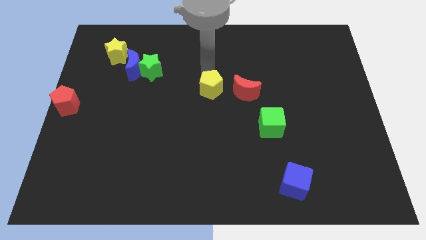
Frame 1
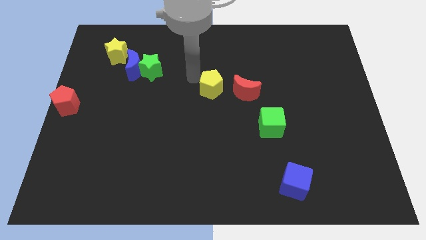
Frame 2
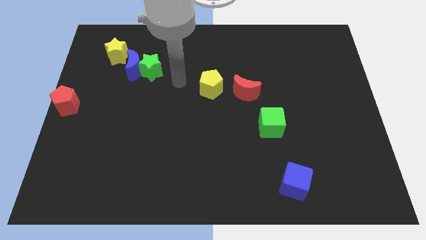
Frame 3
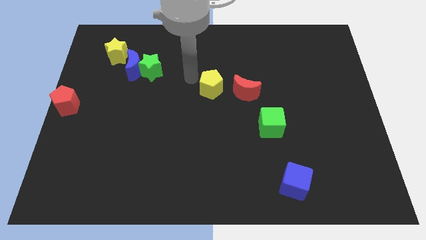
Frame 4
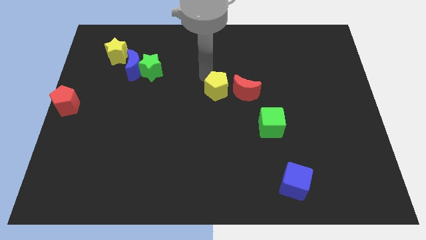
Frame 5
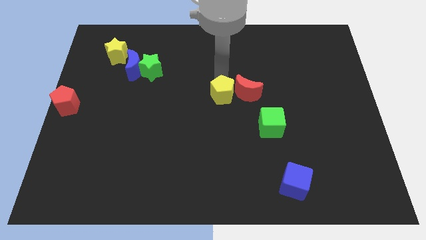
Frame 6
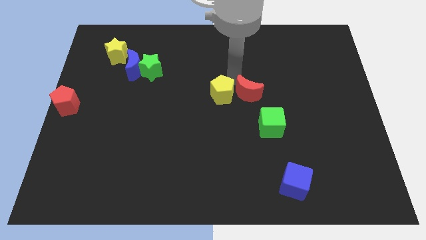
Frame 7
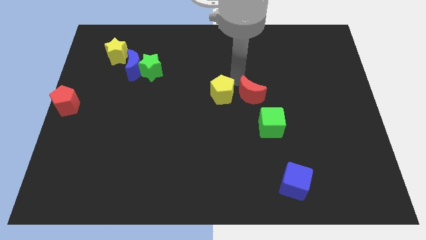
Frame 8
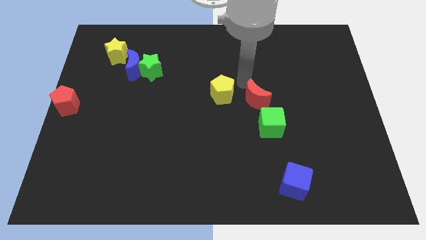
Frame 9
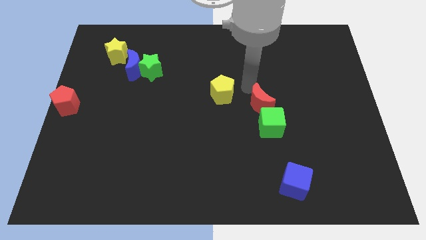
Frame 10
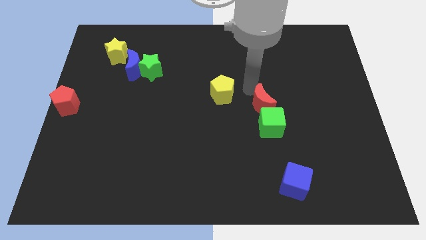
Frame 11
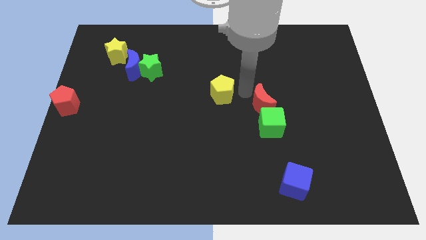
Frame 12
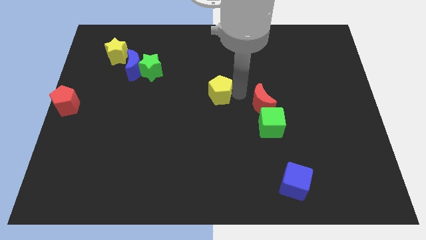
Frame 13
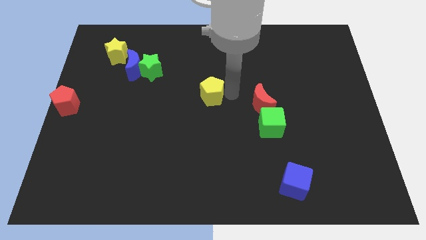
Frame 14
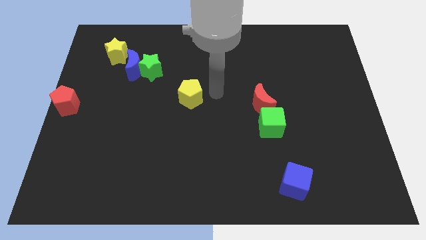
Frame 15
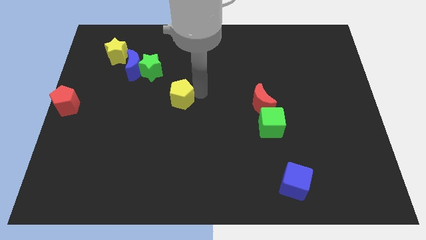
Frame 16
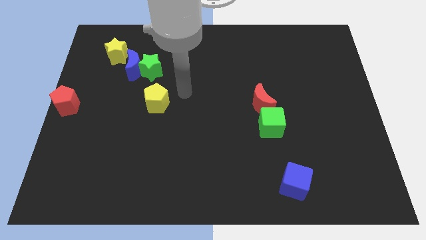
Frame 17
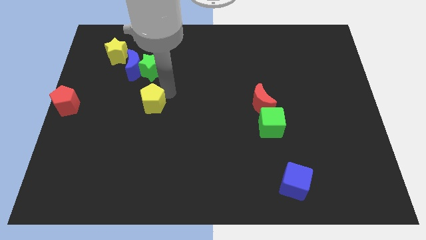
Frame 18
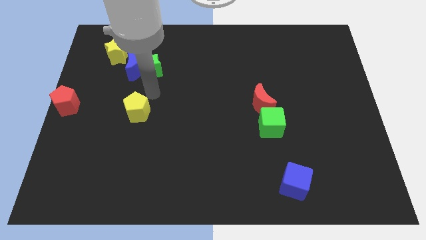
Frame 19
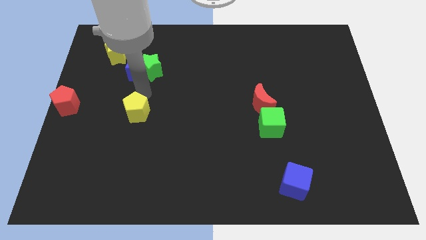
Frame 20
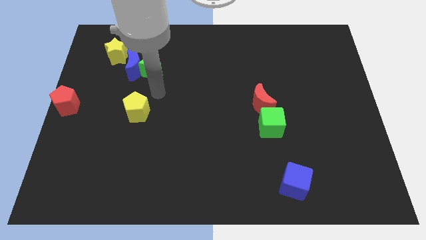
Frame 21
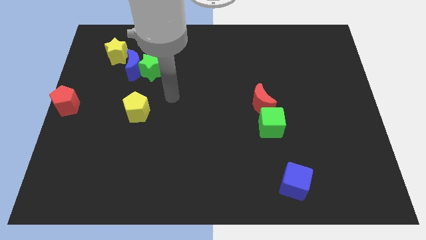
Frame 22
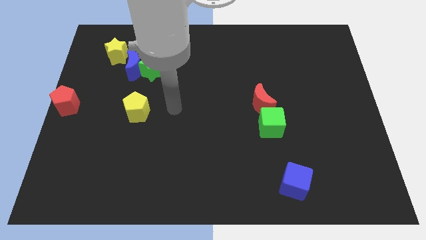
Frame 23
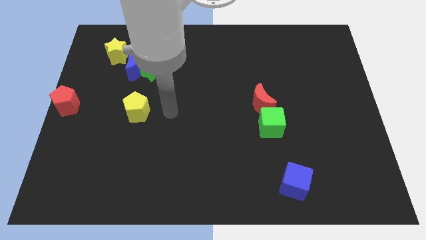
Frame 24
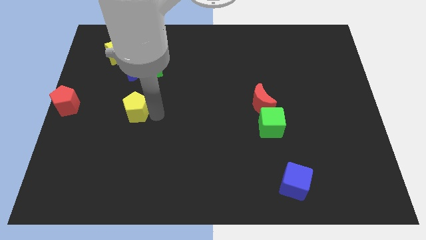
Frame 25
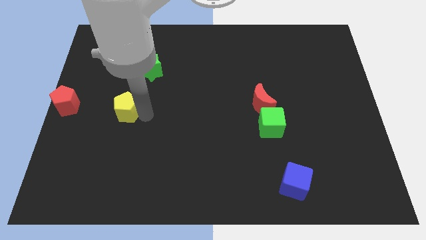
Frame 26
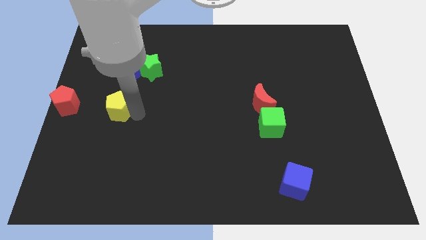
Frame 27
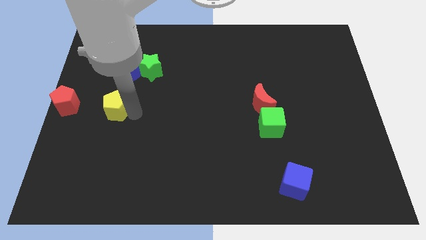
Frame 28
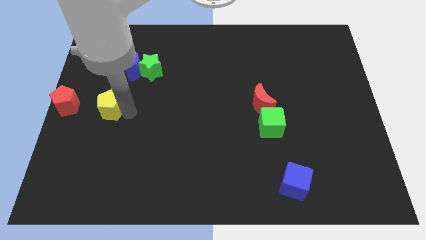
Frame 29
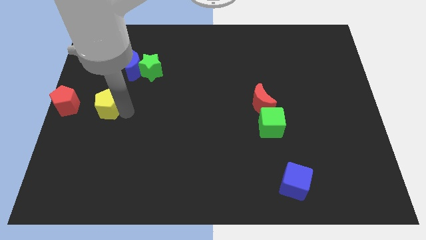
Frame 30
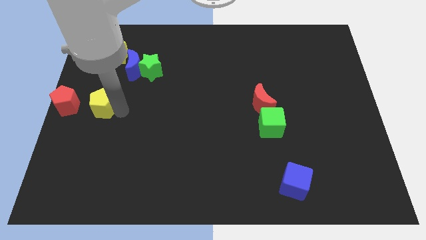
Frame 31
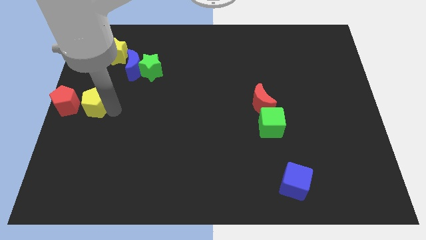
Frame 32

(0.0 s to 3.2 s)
push the yellow pentagon close to the red pentagon

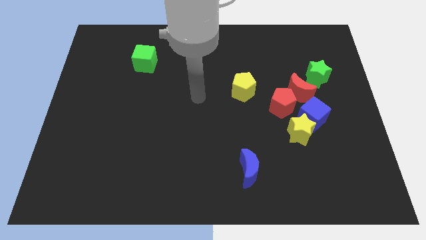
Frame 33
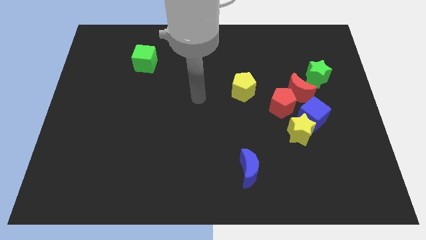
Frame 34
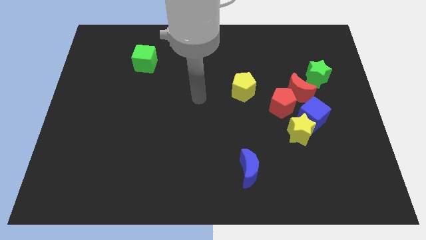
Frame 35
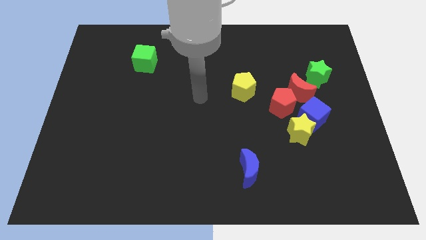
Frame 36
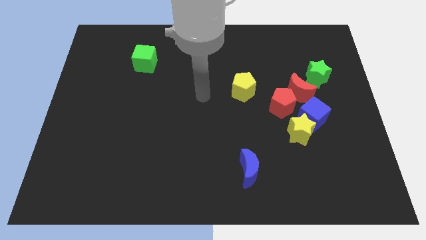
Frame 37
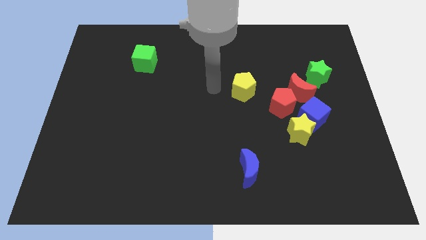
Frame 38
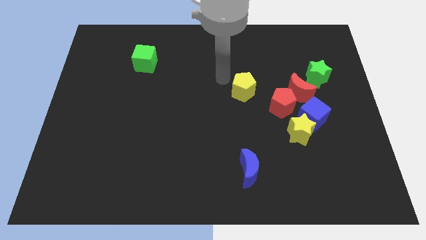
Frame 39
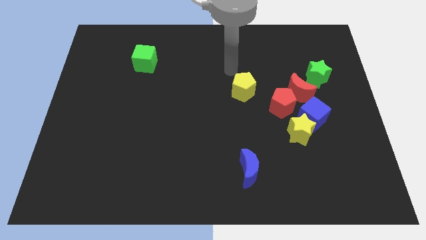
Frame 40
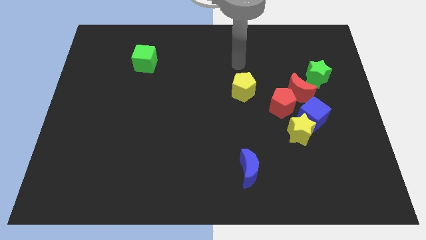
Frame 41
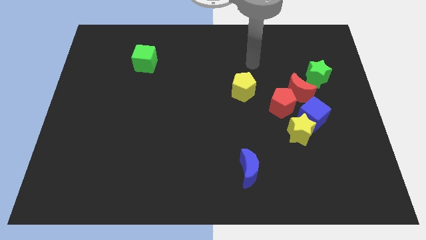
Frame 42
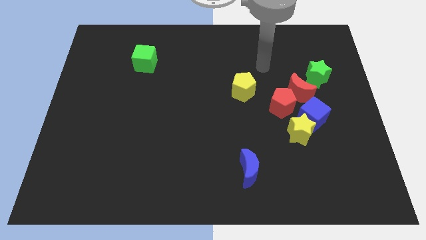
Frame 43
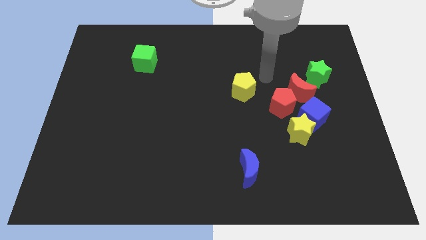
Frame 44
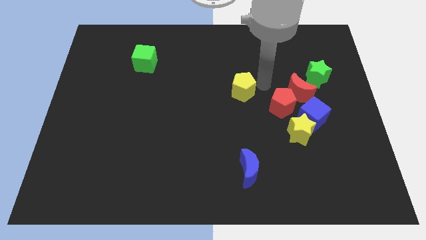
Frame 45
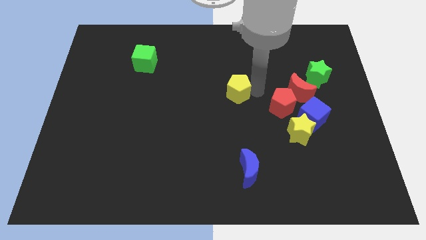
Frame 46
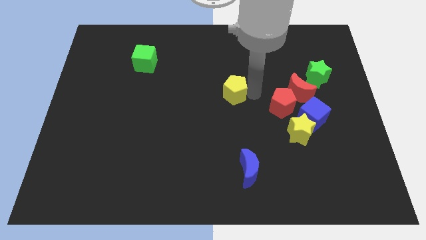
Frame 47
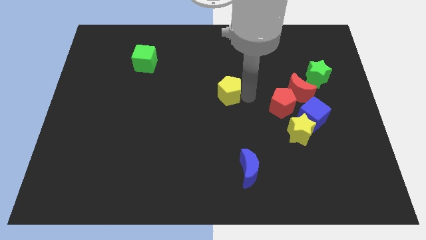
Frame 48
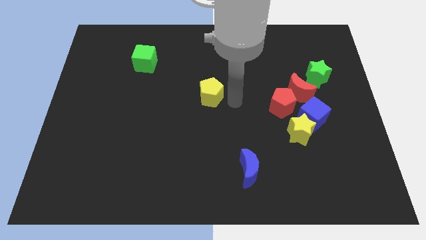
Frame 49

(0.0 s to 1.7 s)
move your arm close to the yellow pentagon

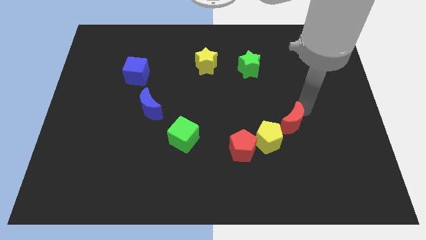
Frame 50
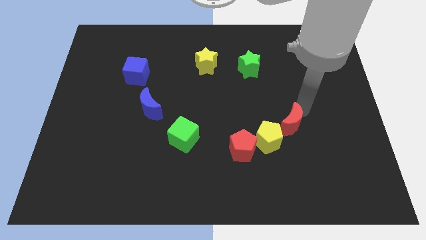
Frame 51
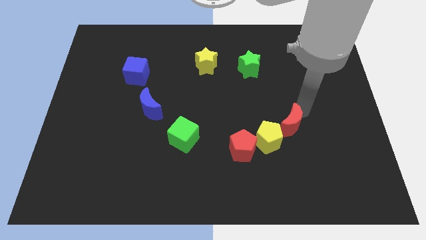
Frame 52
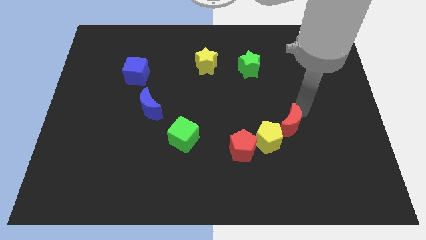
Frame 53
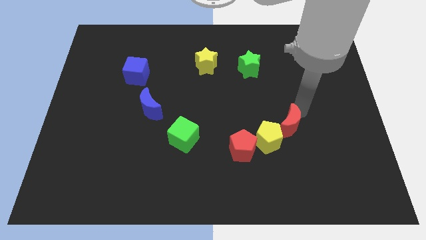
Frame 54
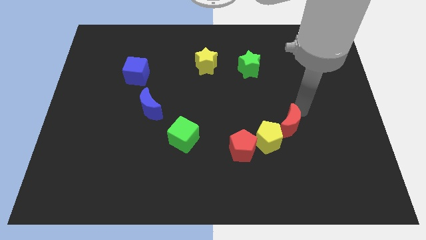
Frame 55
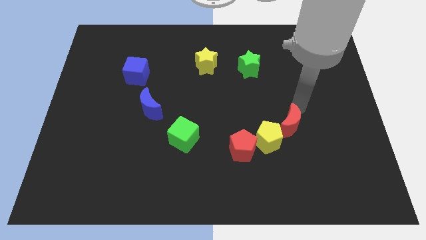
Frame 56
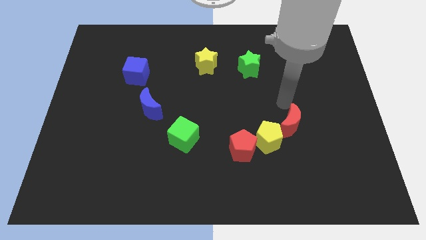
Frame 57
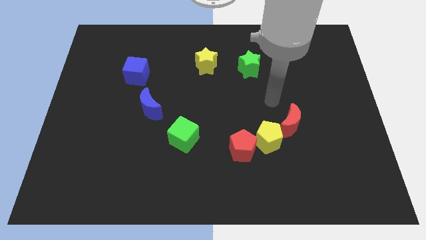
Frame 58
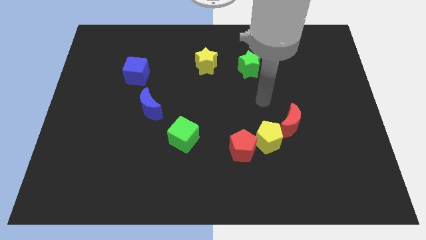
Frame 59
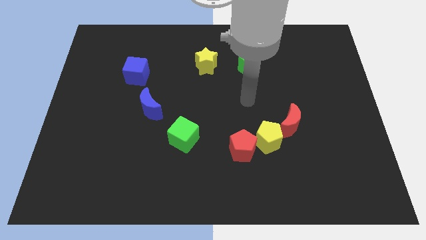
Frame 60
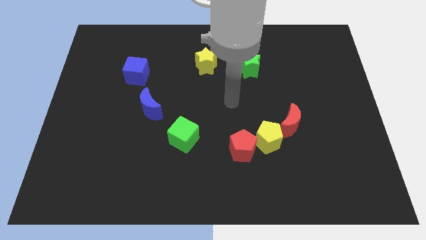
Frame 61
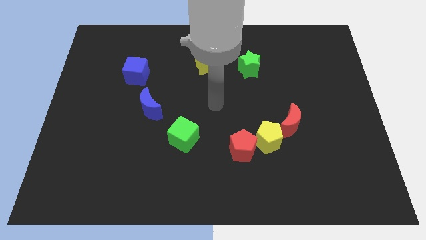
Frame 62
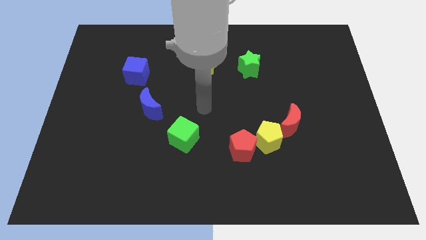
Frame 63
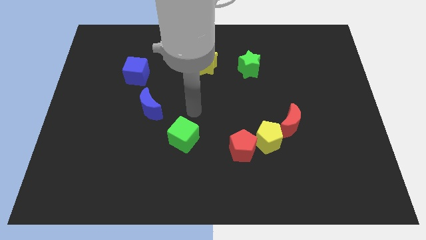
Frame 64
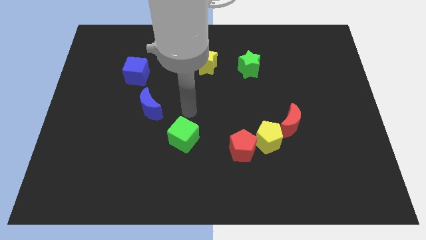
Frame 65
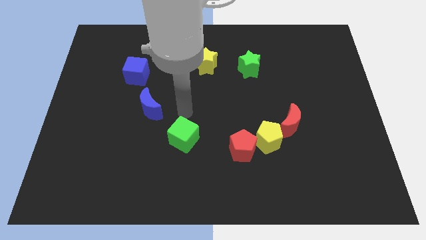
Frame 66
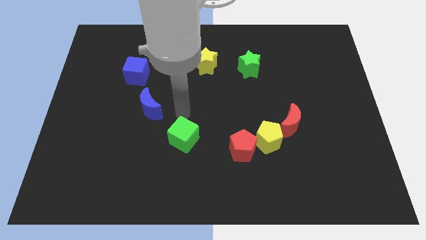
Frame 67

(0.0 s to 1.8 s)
move the red moon into the yellow pentagon

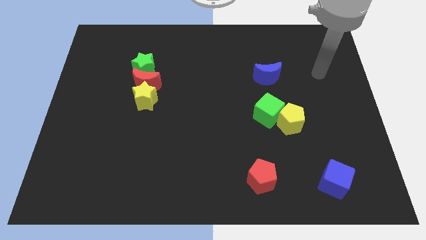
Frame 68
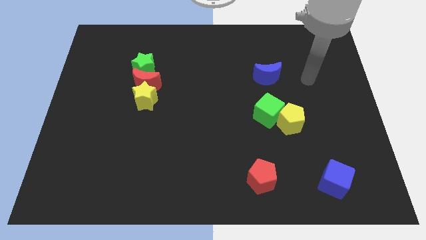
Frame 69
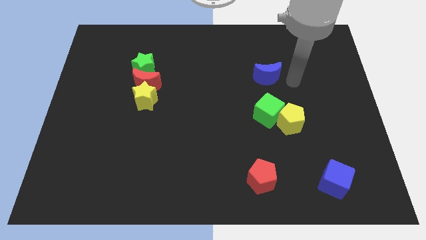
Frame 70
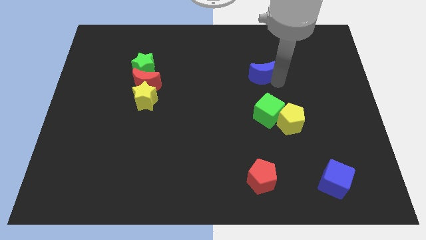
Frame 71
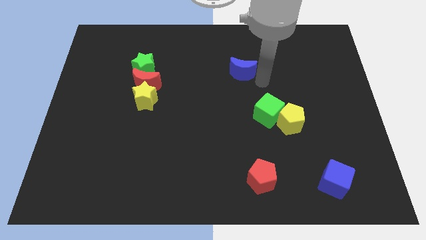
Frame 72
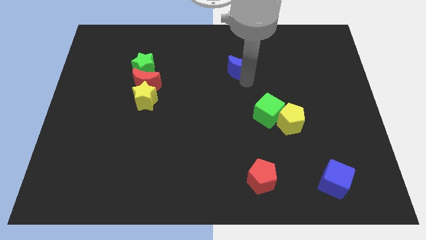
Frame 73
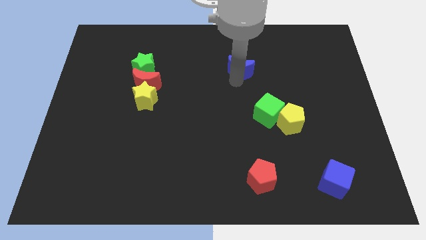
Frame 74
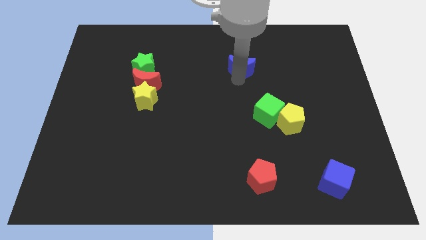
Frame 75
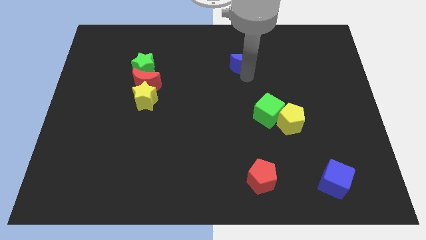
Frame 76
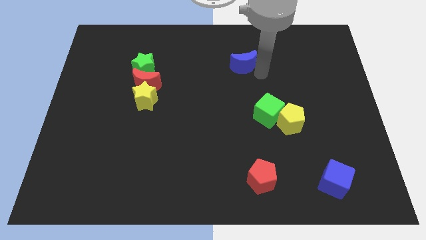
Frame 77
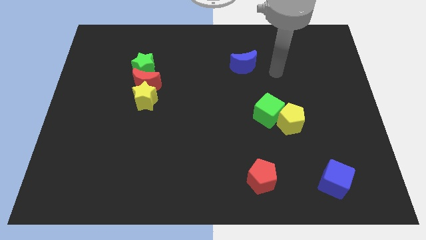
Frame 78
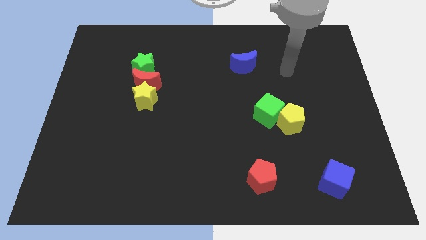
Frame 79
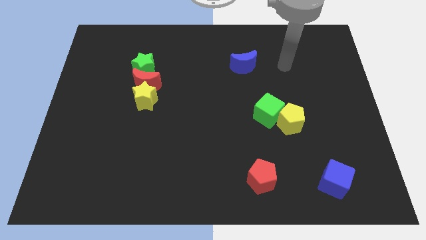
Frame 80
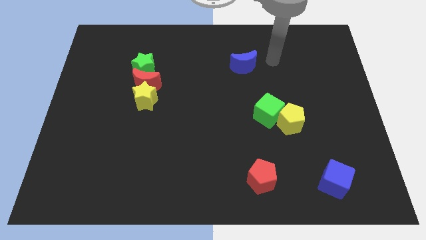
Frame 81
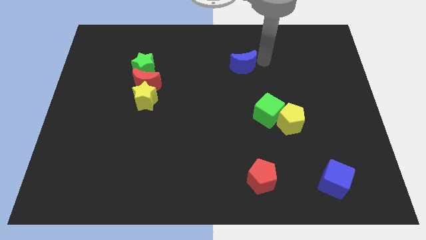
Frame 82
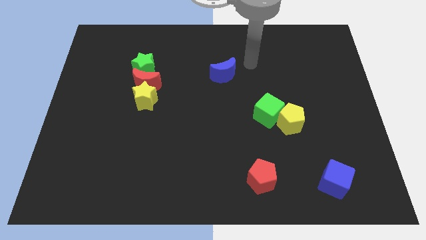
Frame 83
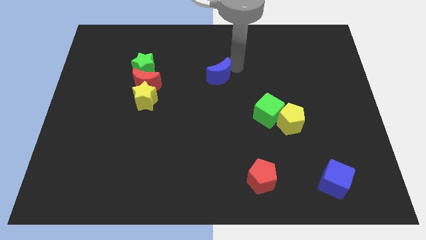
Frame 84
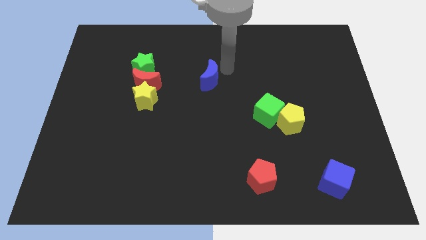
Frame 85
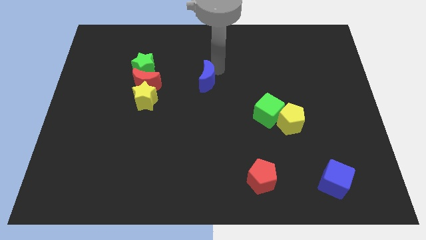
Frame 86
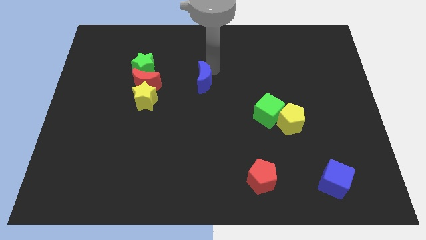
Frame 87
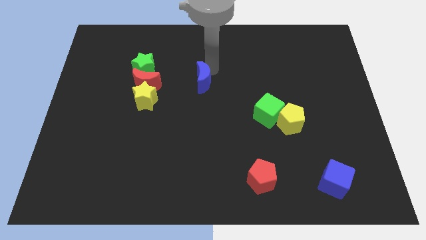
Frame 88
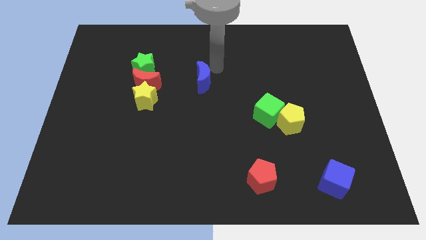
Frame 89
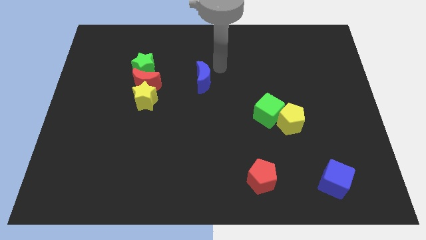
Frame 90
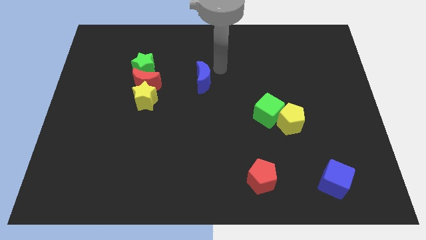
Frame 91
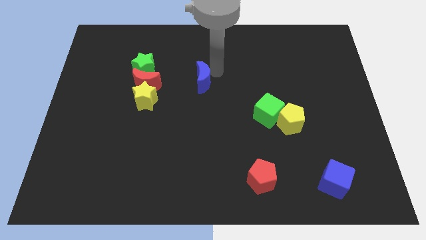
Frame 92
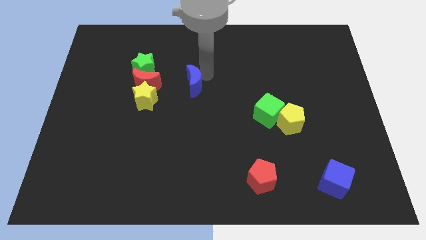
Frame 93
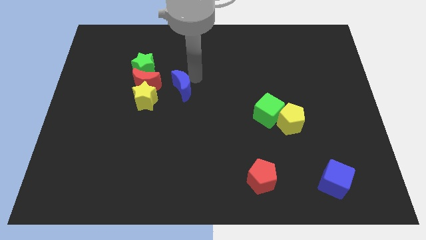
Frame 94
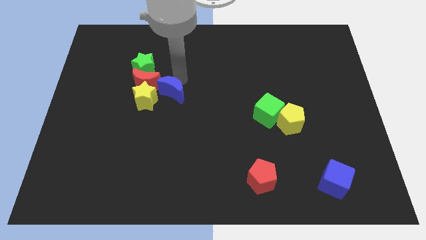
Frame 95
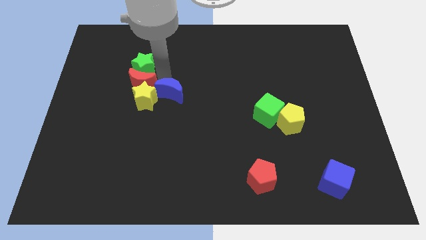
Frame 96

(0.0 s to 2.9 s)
push blue crescent in red moon
